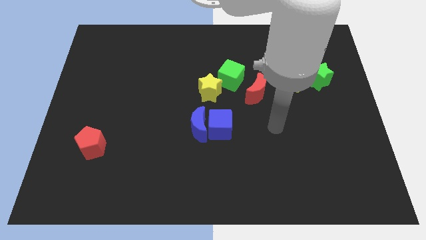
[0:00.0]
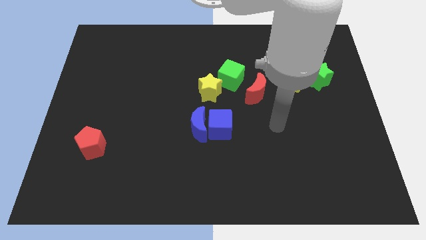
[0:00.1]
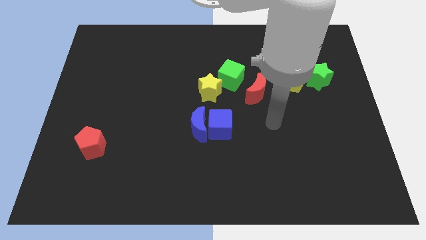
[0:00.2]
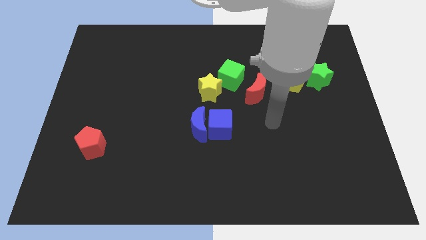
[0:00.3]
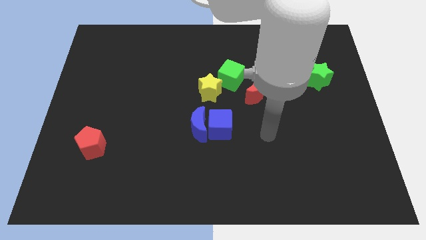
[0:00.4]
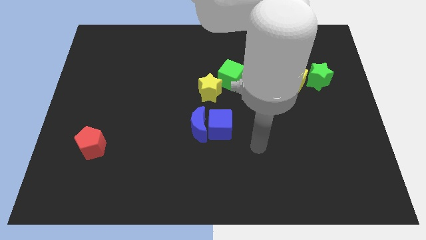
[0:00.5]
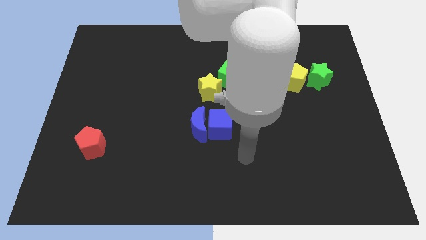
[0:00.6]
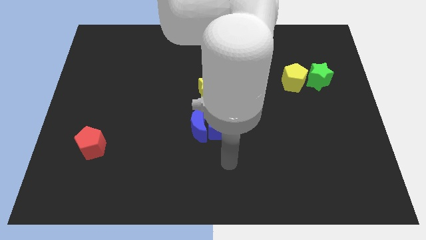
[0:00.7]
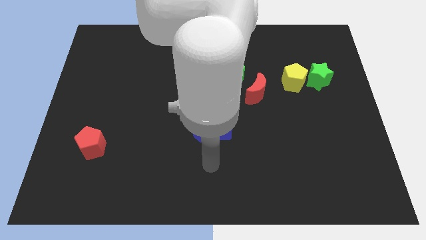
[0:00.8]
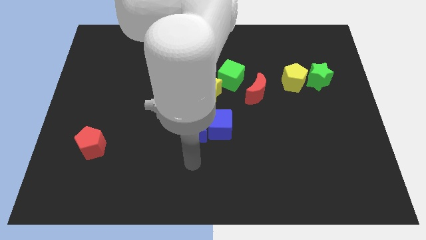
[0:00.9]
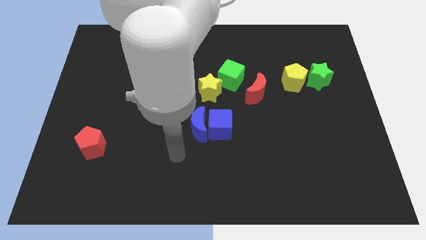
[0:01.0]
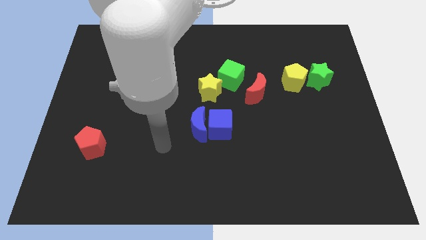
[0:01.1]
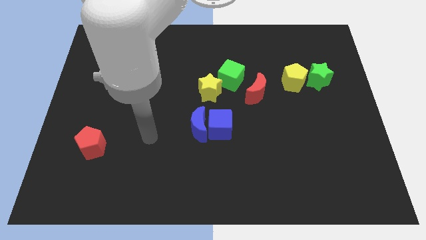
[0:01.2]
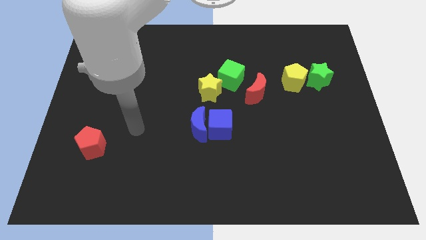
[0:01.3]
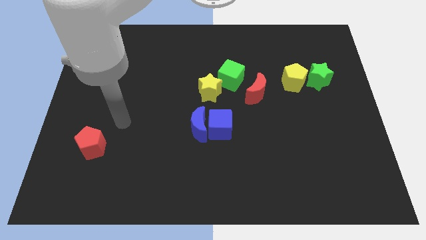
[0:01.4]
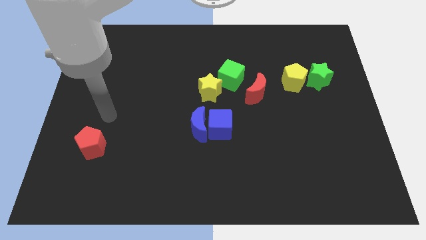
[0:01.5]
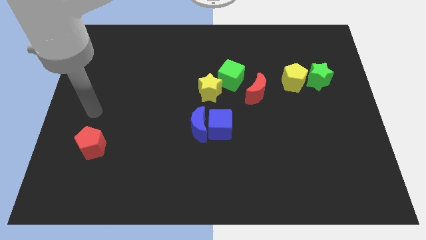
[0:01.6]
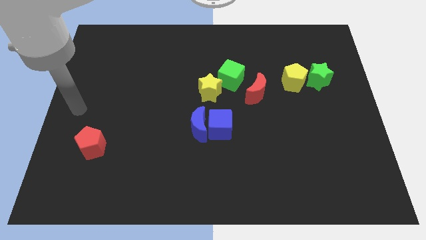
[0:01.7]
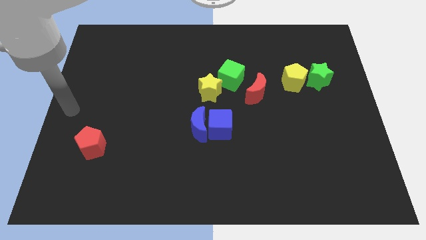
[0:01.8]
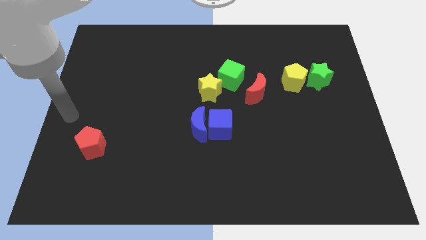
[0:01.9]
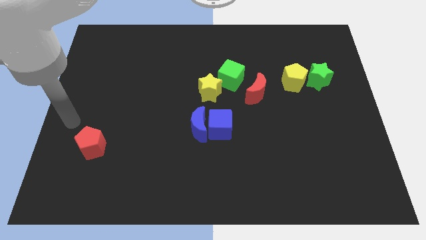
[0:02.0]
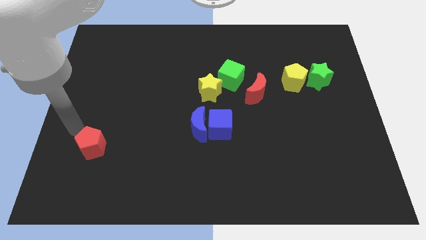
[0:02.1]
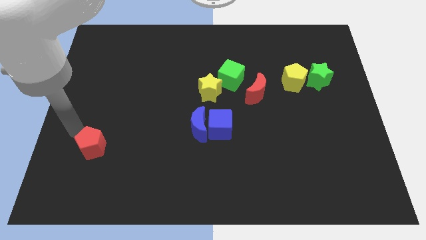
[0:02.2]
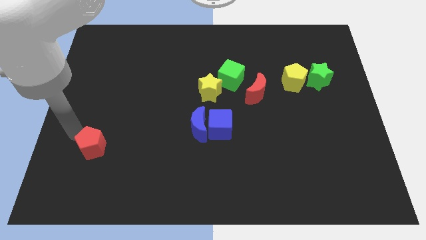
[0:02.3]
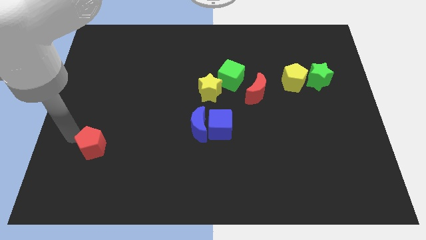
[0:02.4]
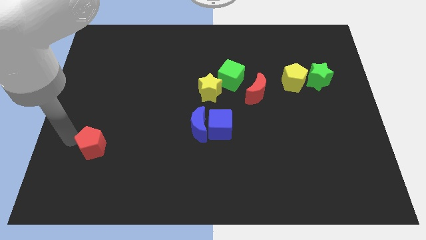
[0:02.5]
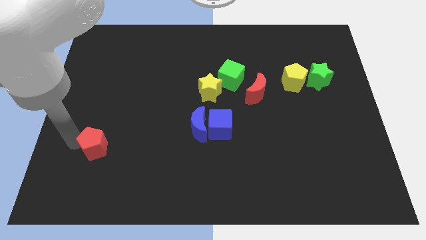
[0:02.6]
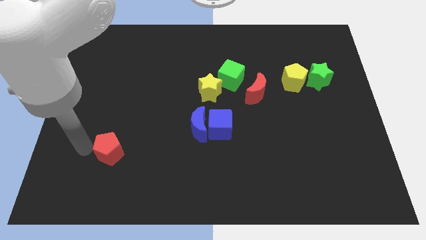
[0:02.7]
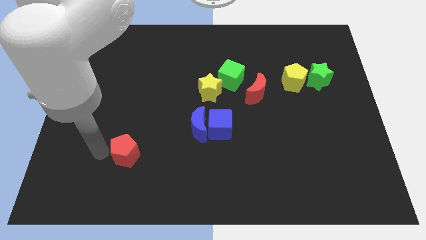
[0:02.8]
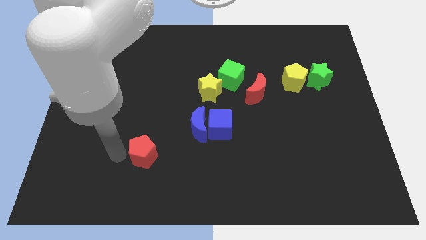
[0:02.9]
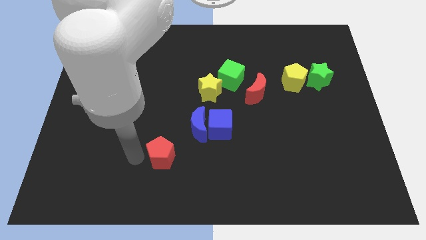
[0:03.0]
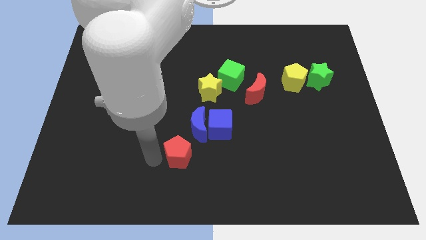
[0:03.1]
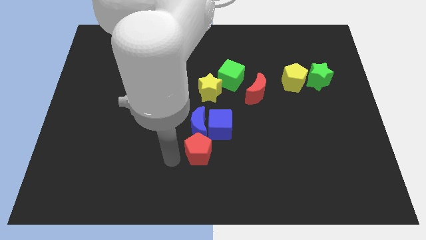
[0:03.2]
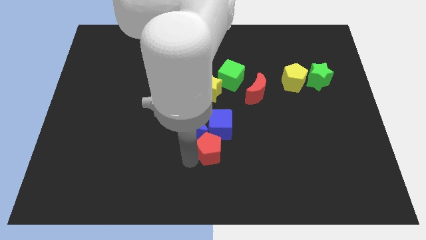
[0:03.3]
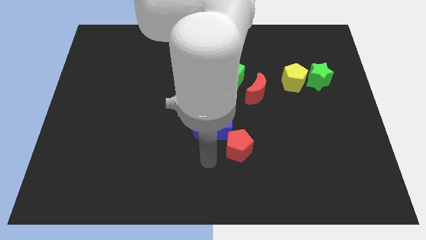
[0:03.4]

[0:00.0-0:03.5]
move the red pentagon to the bottom of the blue crescent and blue cube

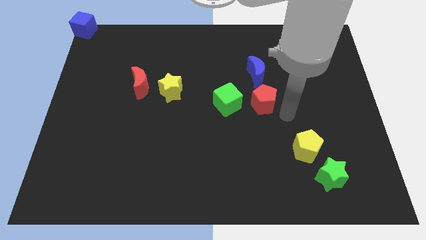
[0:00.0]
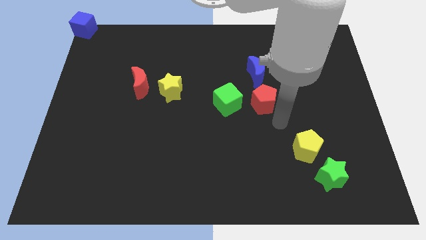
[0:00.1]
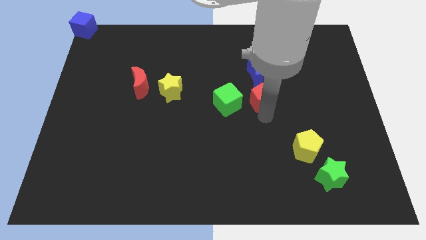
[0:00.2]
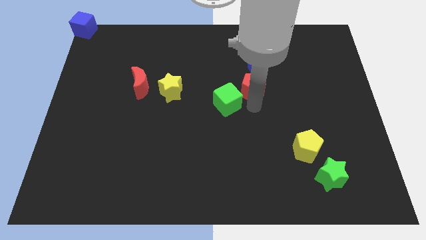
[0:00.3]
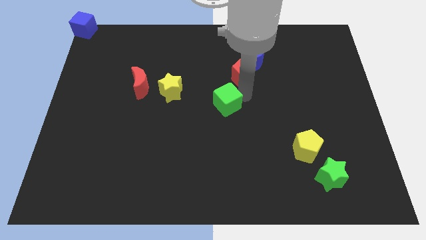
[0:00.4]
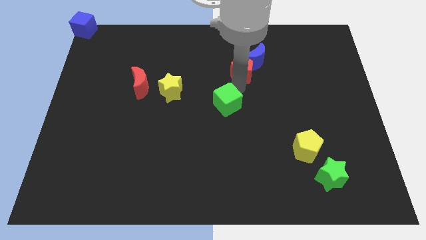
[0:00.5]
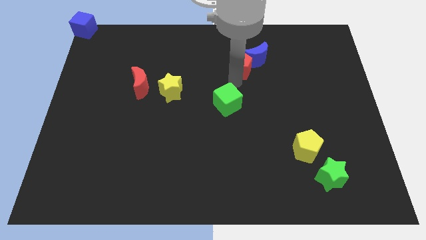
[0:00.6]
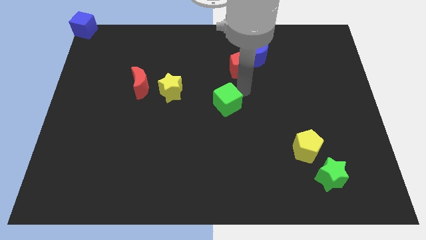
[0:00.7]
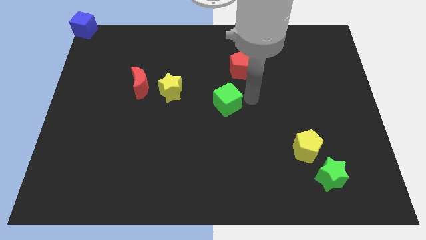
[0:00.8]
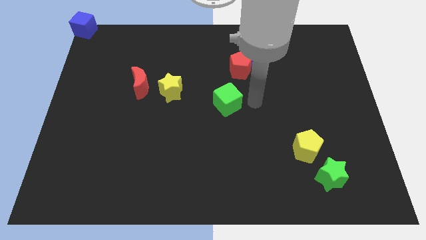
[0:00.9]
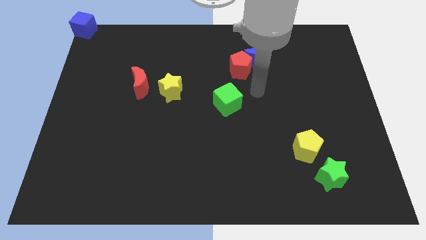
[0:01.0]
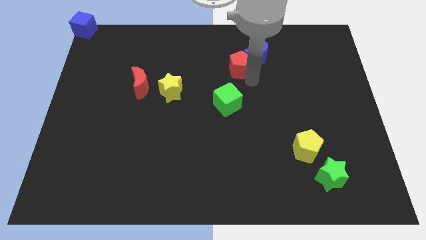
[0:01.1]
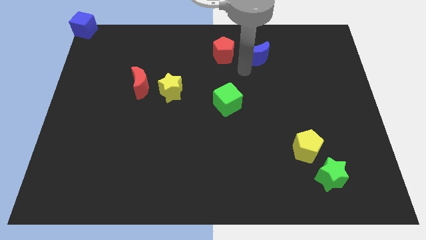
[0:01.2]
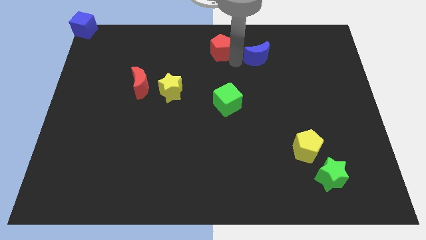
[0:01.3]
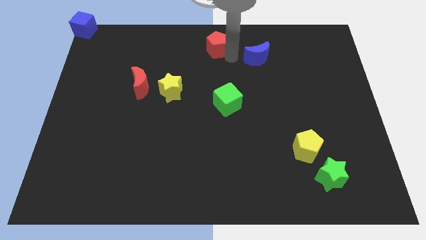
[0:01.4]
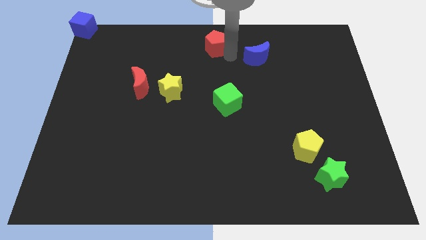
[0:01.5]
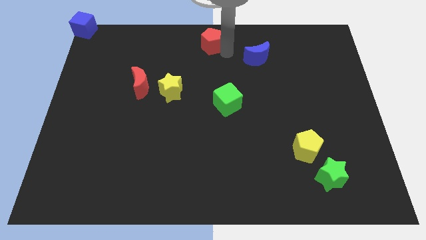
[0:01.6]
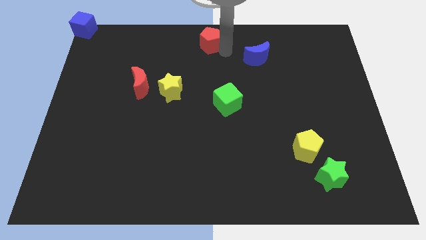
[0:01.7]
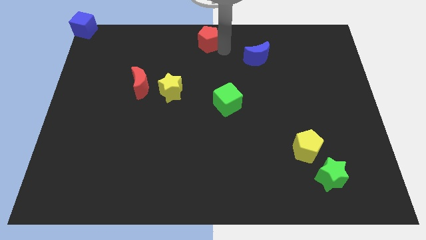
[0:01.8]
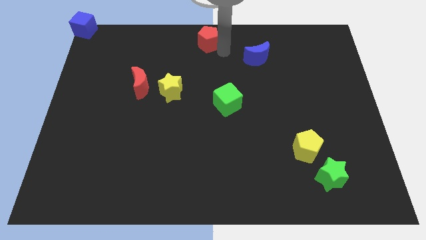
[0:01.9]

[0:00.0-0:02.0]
move the red pentagon to the top center

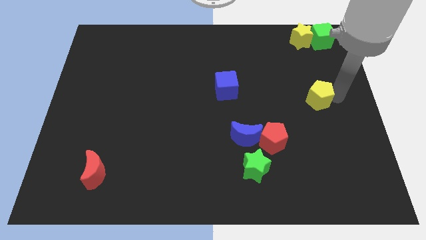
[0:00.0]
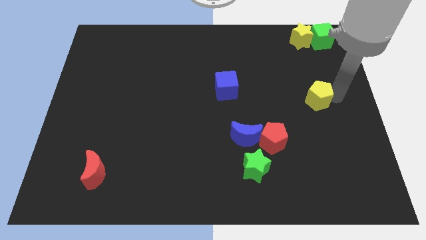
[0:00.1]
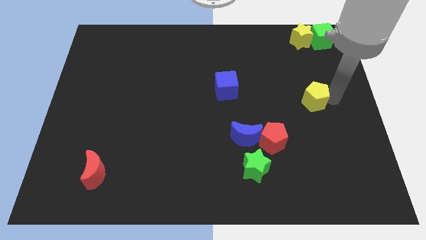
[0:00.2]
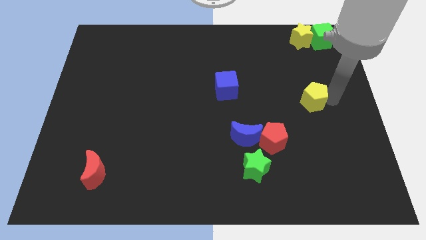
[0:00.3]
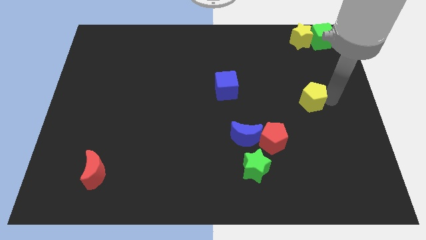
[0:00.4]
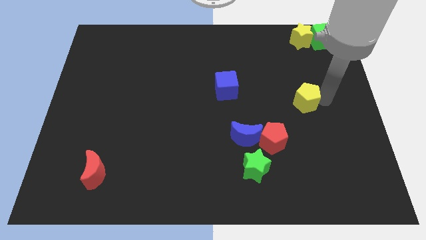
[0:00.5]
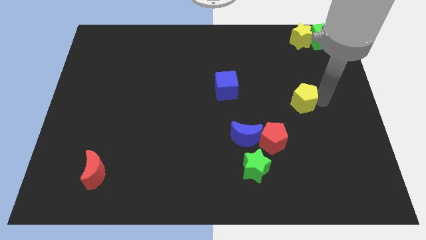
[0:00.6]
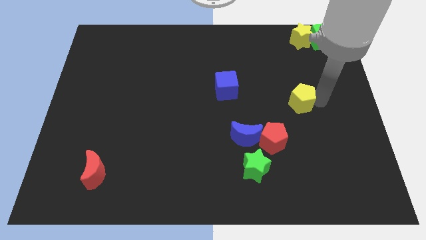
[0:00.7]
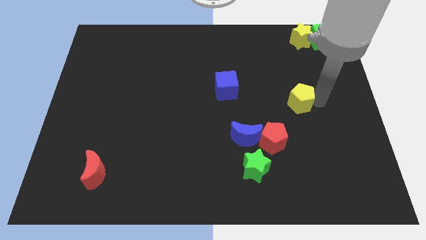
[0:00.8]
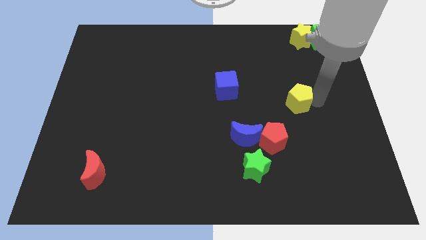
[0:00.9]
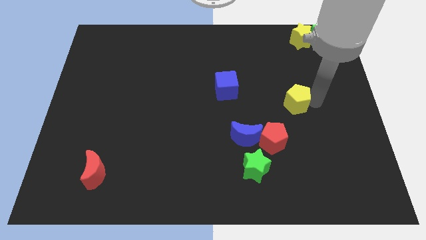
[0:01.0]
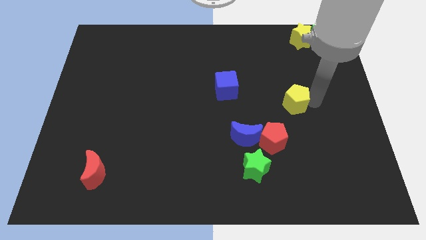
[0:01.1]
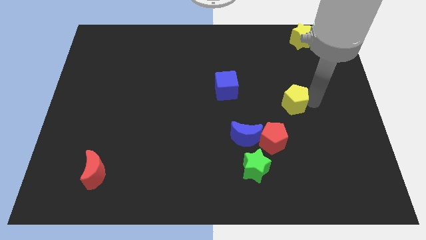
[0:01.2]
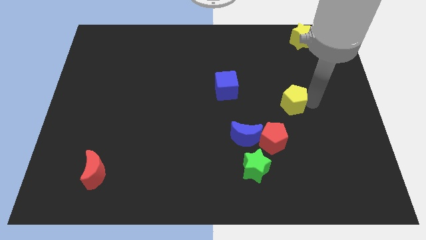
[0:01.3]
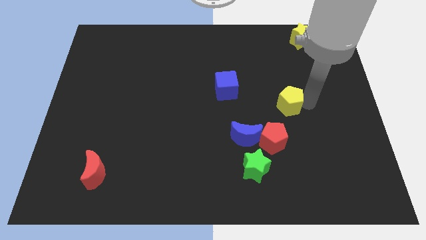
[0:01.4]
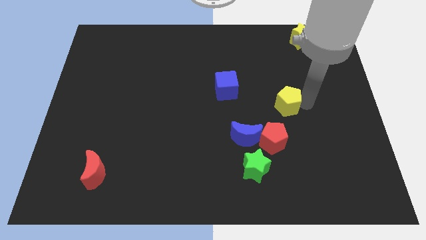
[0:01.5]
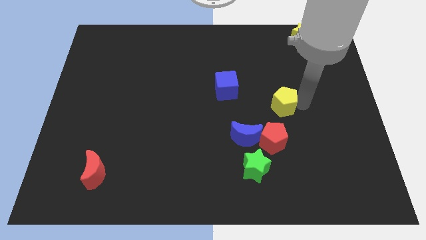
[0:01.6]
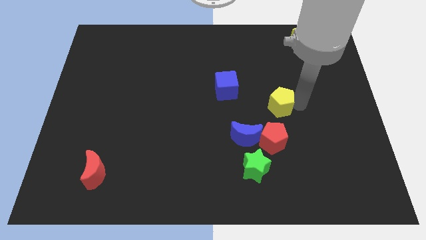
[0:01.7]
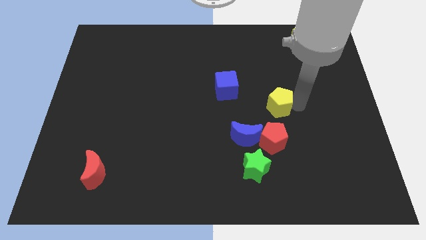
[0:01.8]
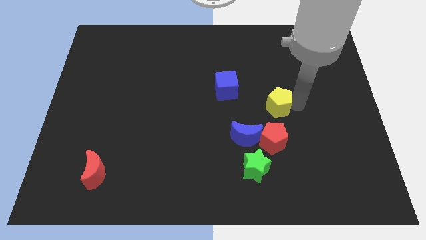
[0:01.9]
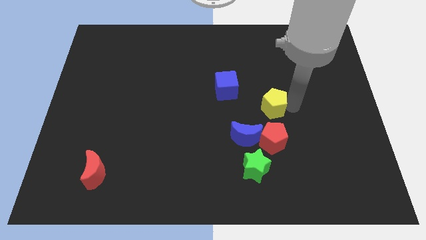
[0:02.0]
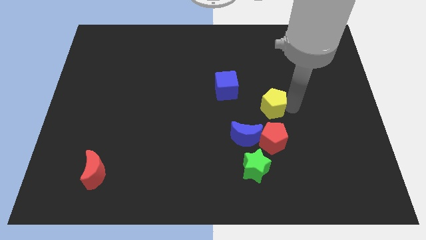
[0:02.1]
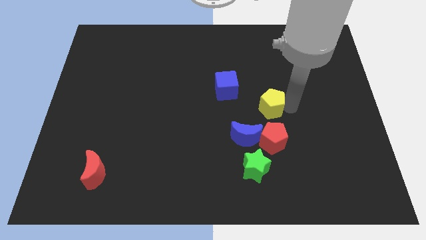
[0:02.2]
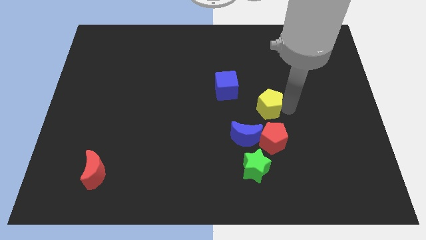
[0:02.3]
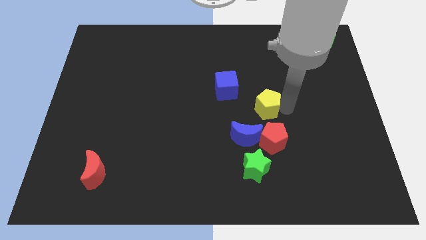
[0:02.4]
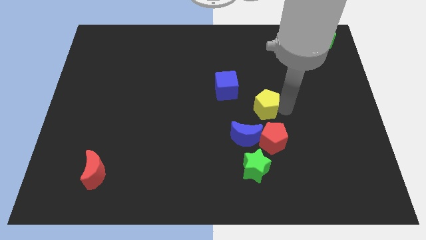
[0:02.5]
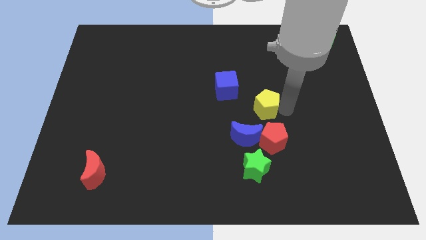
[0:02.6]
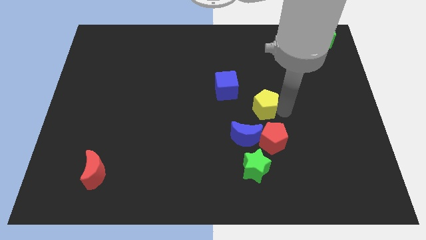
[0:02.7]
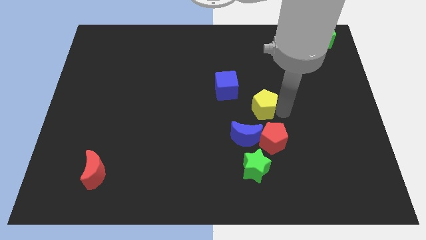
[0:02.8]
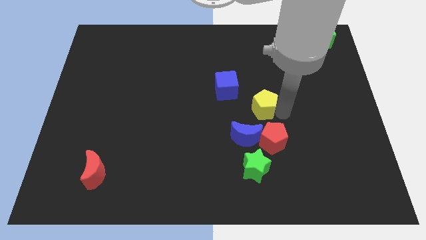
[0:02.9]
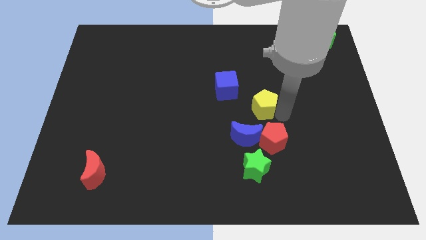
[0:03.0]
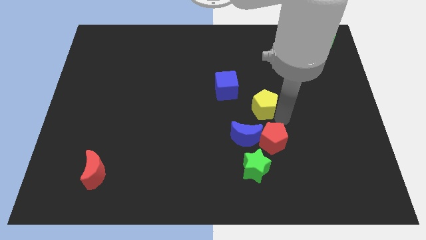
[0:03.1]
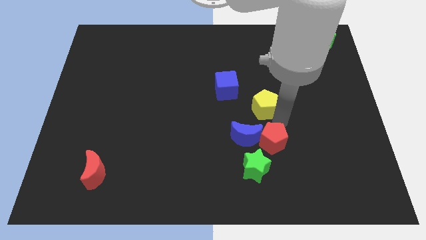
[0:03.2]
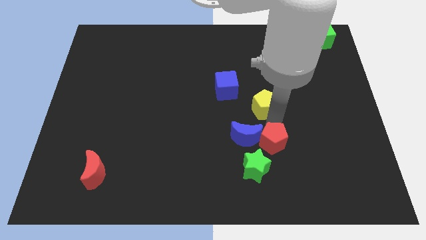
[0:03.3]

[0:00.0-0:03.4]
push yellow pentagon towards blue cube
